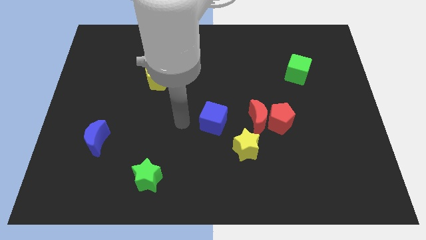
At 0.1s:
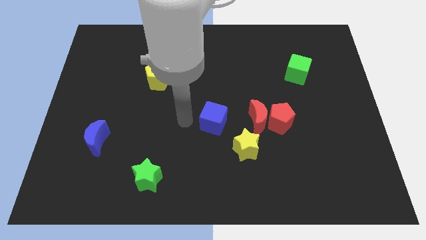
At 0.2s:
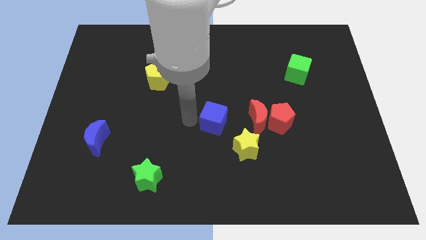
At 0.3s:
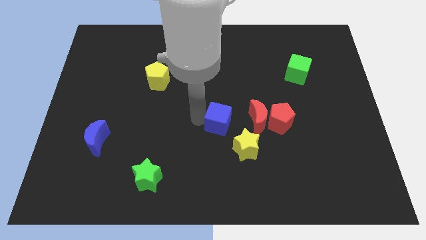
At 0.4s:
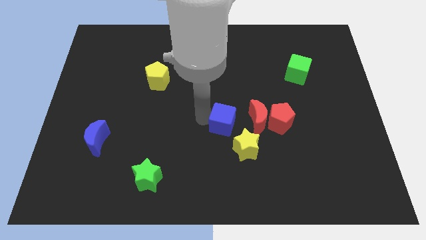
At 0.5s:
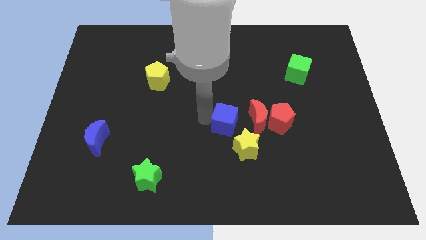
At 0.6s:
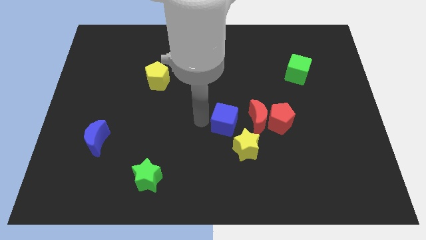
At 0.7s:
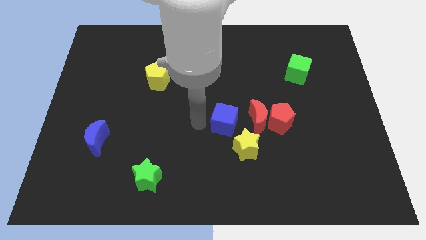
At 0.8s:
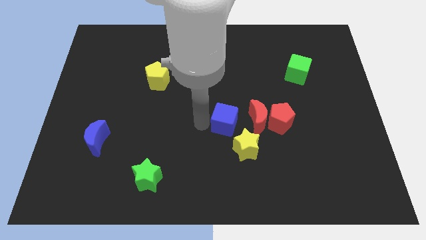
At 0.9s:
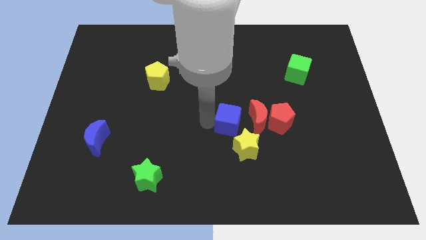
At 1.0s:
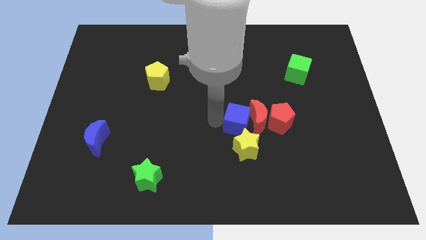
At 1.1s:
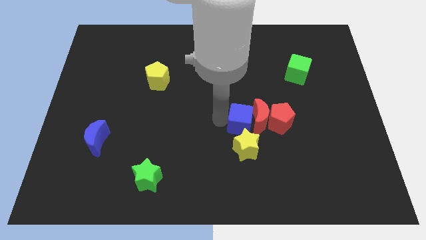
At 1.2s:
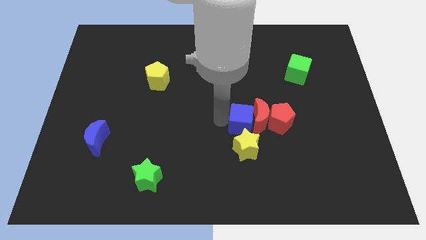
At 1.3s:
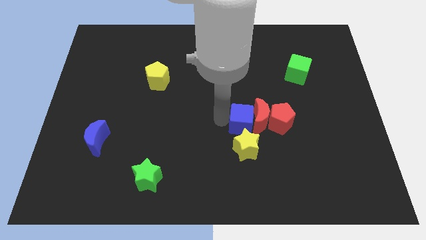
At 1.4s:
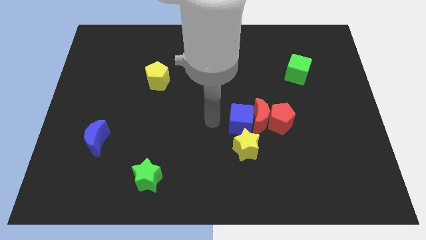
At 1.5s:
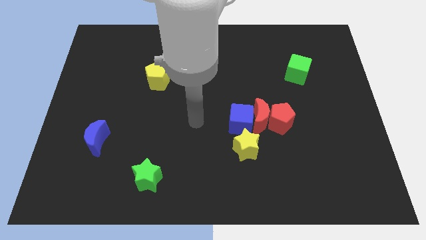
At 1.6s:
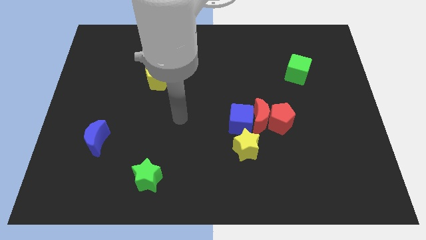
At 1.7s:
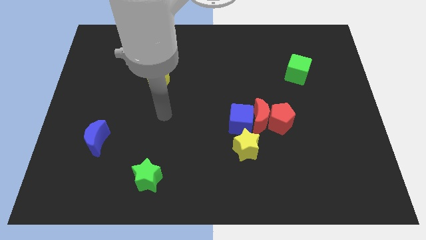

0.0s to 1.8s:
push the blue cube into the red crescent

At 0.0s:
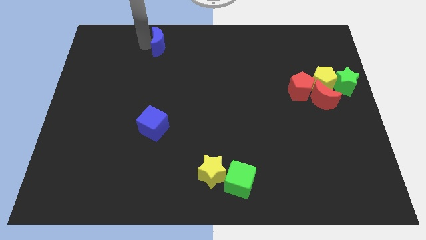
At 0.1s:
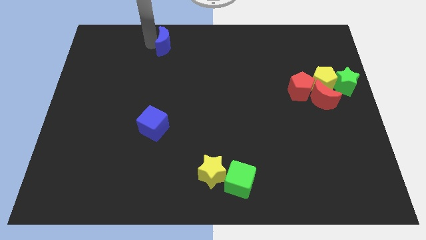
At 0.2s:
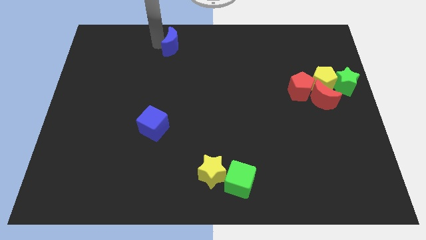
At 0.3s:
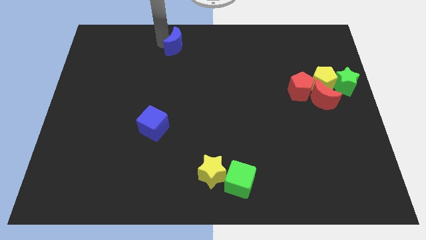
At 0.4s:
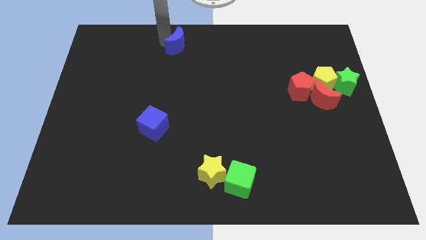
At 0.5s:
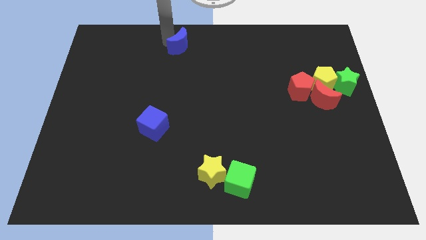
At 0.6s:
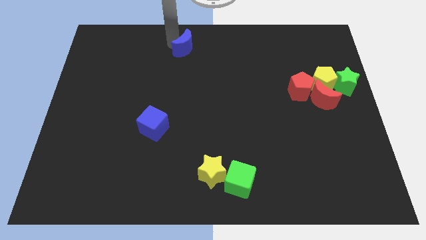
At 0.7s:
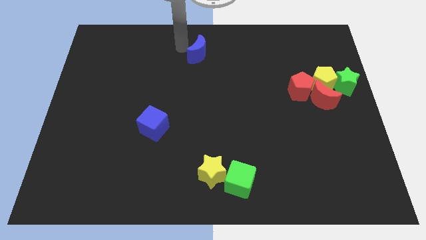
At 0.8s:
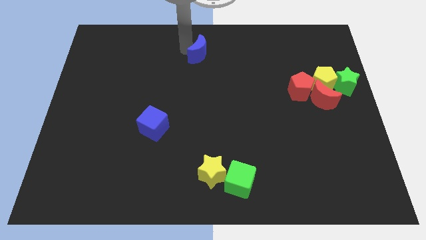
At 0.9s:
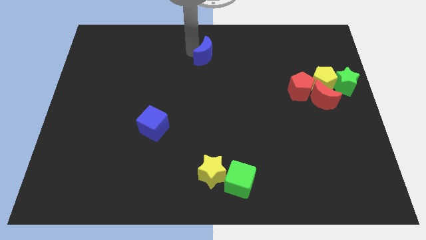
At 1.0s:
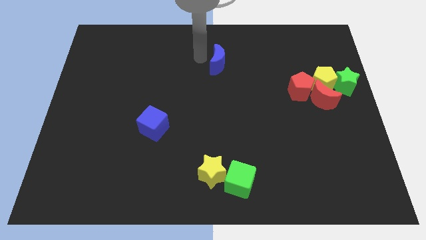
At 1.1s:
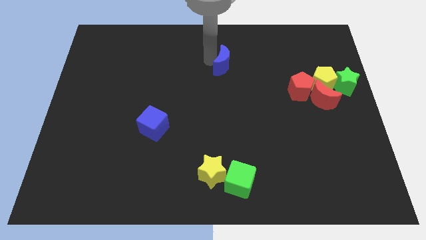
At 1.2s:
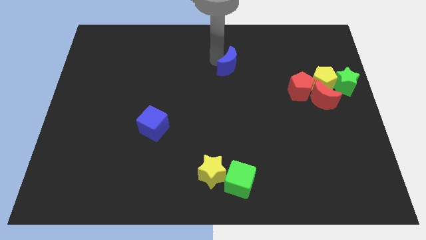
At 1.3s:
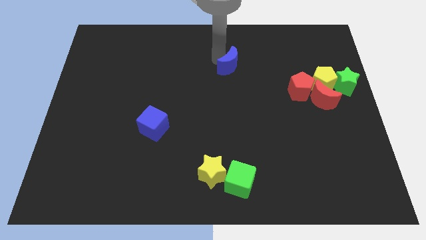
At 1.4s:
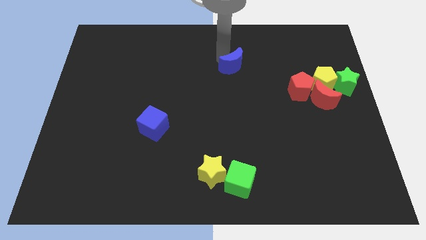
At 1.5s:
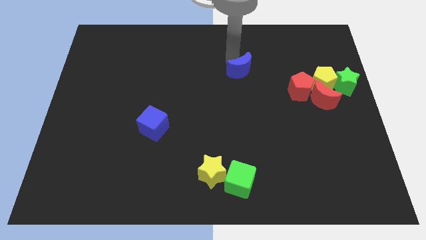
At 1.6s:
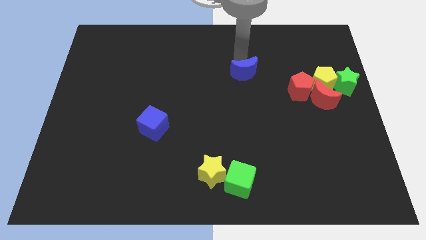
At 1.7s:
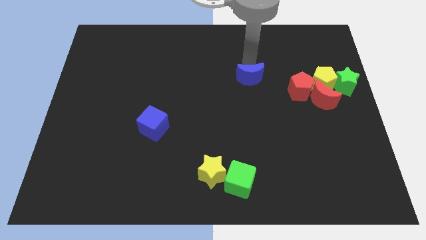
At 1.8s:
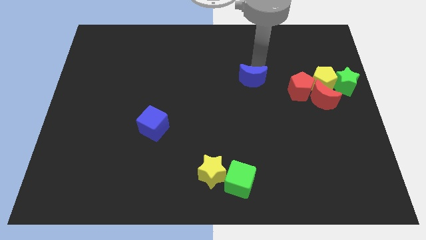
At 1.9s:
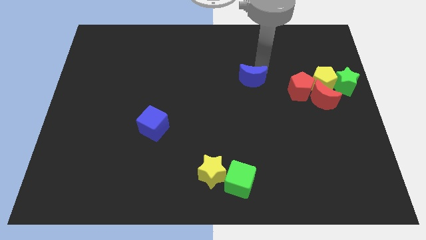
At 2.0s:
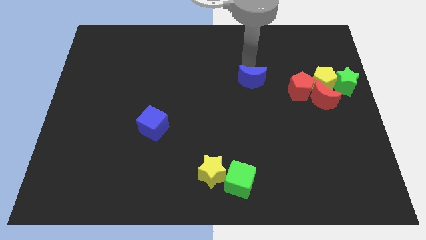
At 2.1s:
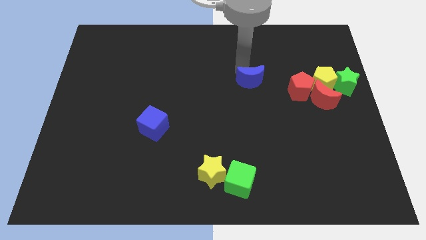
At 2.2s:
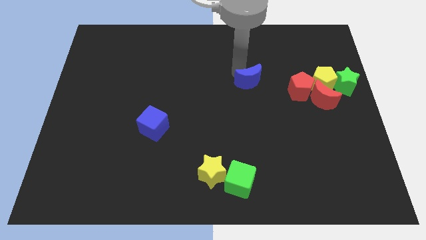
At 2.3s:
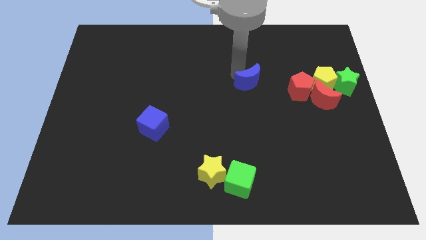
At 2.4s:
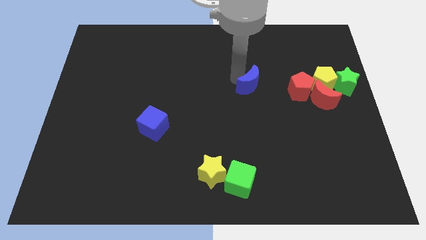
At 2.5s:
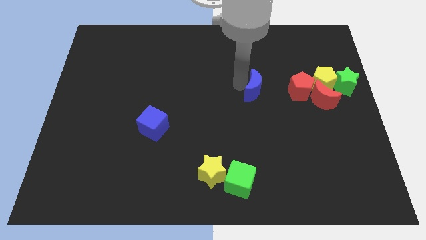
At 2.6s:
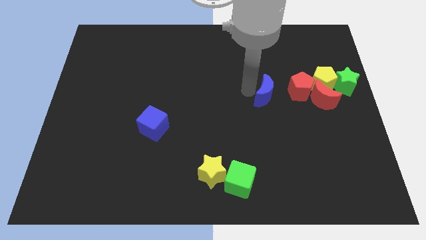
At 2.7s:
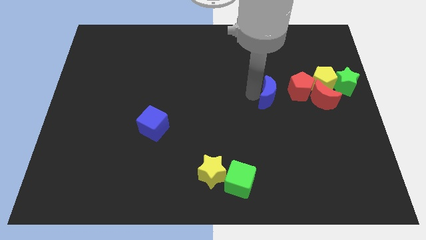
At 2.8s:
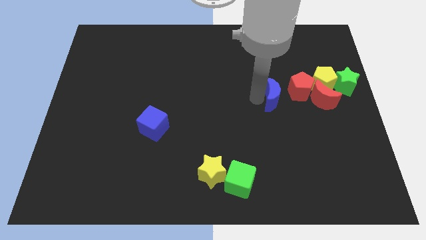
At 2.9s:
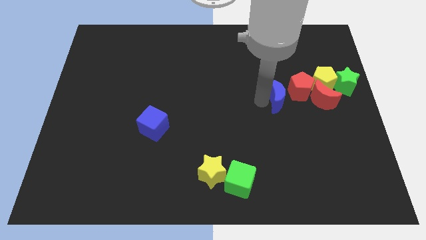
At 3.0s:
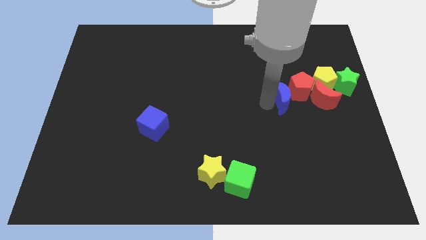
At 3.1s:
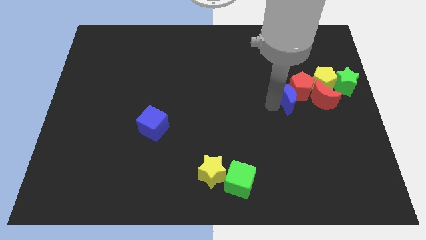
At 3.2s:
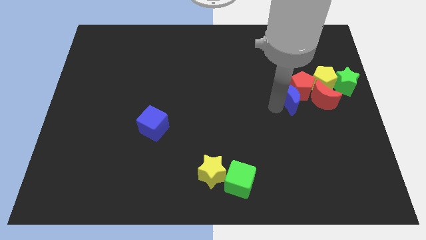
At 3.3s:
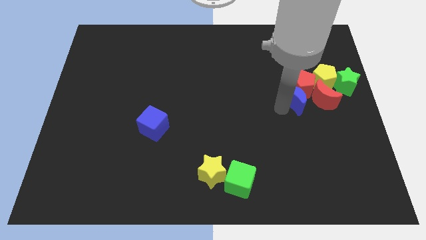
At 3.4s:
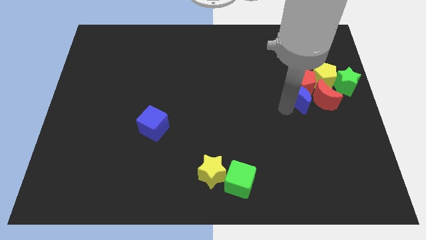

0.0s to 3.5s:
move the blue crescent into the group of blocks

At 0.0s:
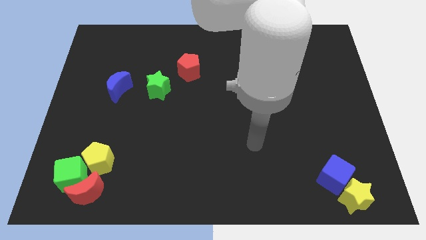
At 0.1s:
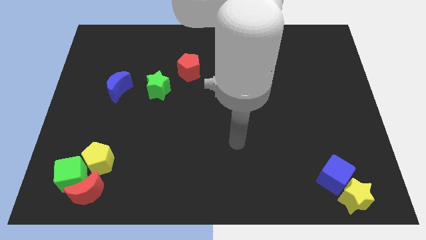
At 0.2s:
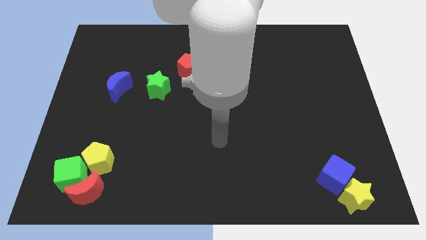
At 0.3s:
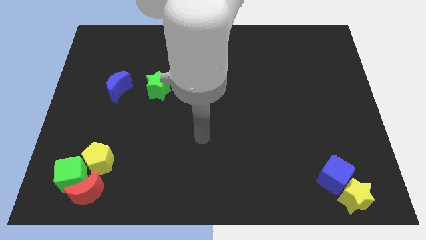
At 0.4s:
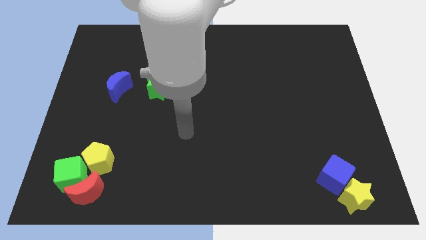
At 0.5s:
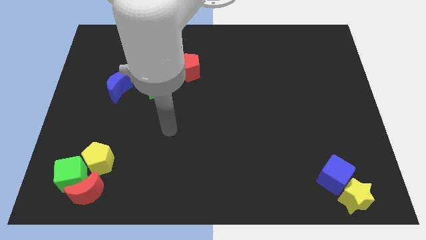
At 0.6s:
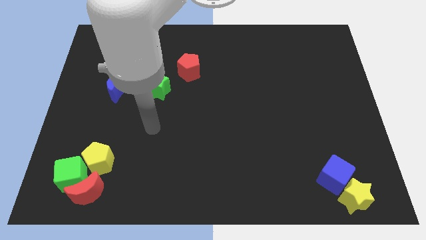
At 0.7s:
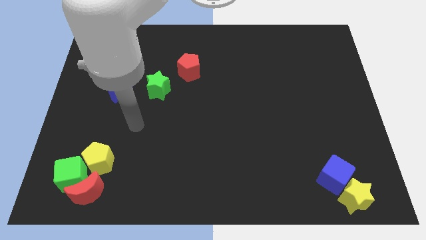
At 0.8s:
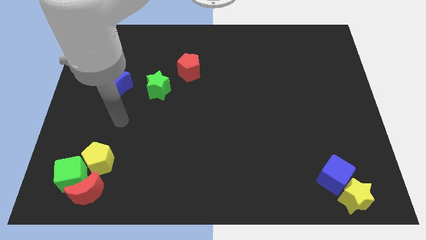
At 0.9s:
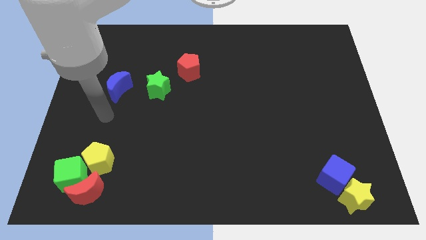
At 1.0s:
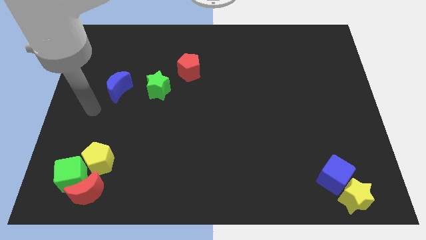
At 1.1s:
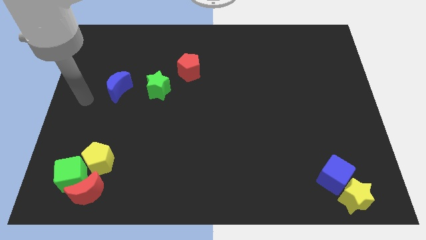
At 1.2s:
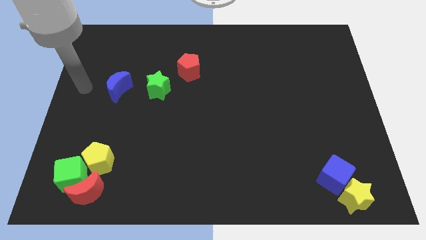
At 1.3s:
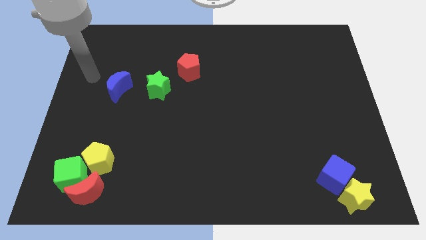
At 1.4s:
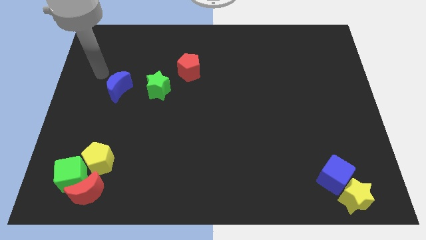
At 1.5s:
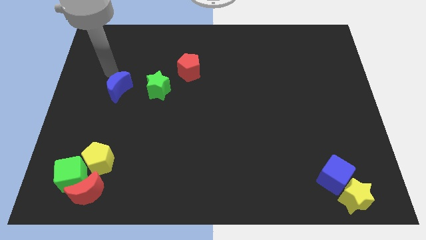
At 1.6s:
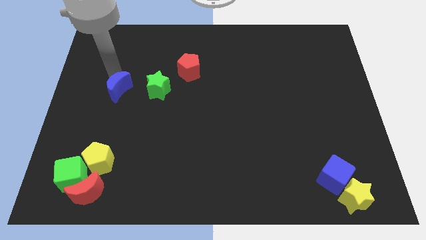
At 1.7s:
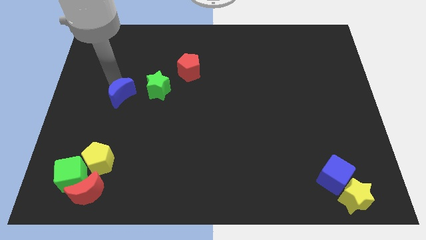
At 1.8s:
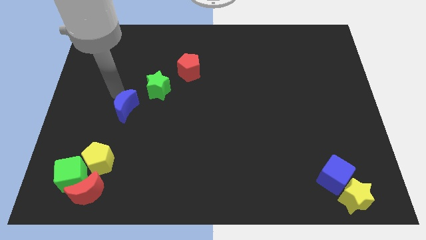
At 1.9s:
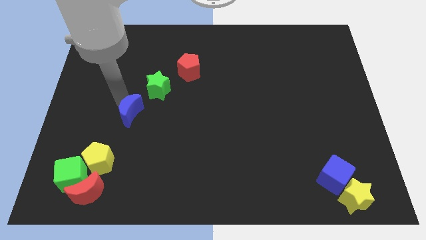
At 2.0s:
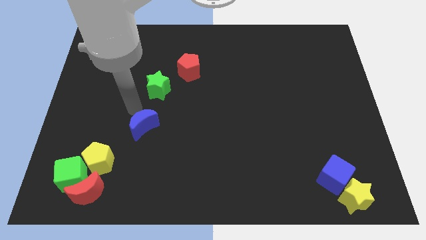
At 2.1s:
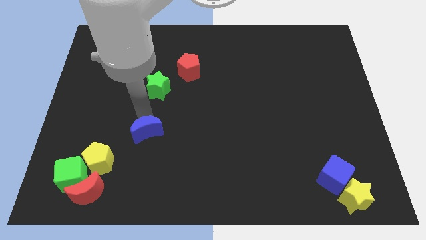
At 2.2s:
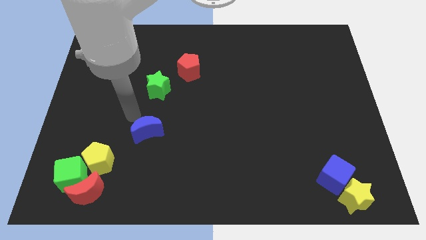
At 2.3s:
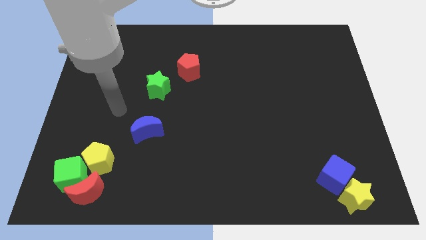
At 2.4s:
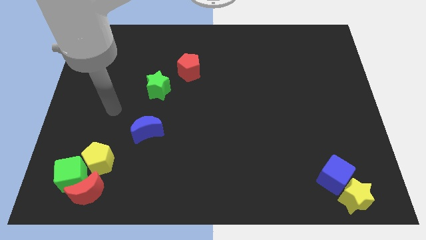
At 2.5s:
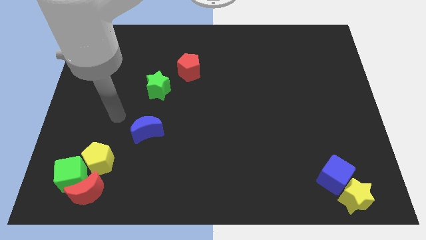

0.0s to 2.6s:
put blue cube vertically below green star

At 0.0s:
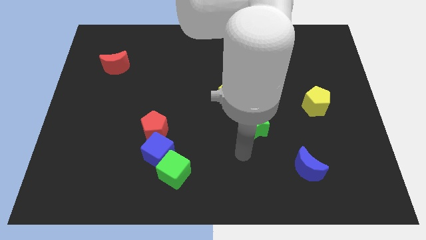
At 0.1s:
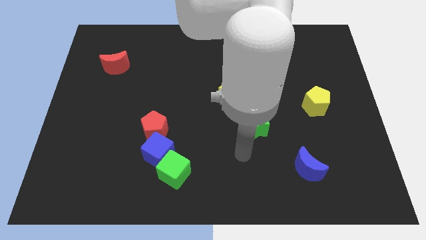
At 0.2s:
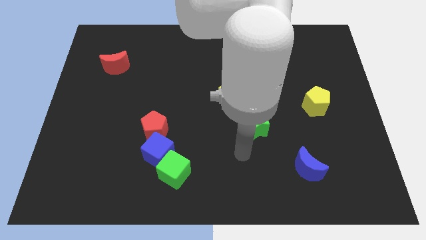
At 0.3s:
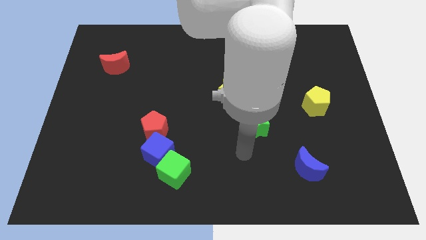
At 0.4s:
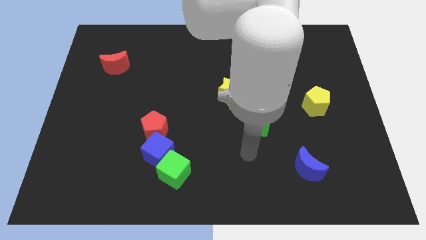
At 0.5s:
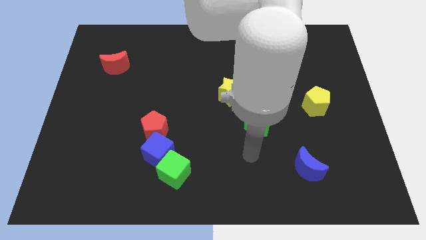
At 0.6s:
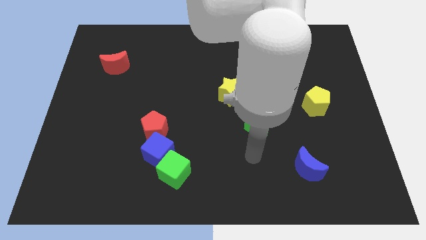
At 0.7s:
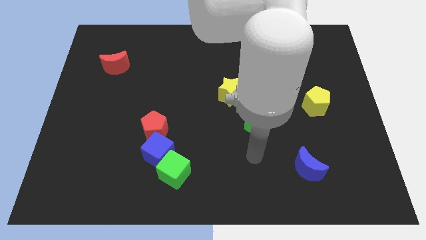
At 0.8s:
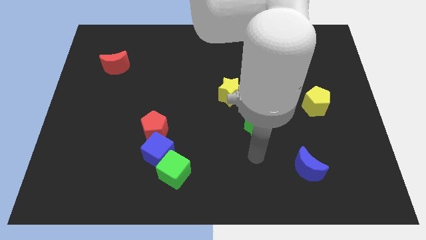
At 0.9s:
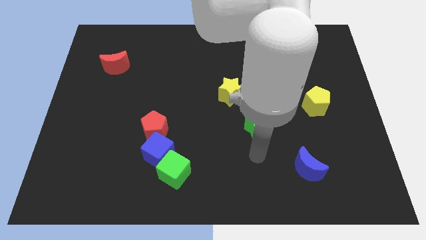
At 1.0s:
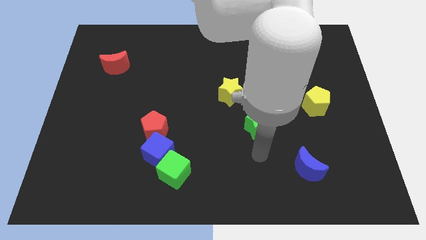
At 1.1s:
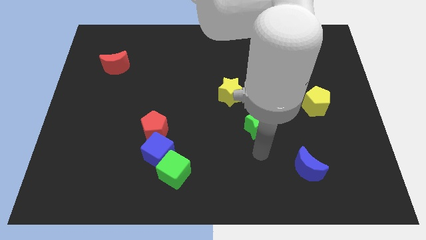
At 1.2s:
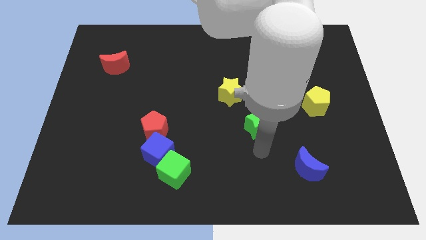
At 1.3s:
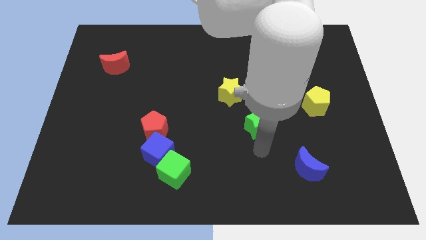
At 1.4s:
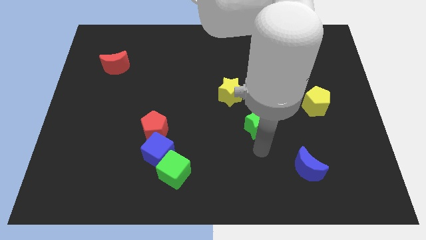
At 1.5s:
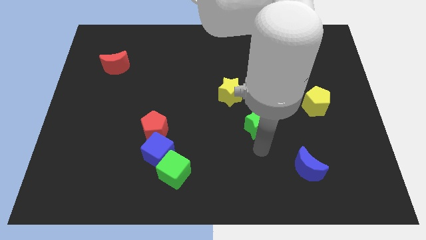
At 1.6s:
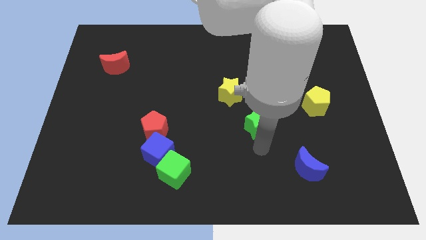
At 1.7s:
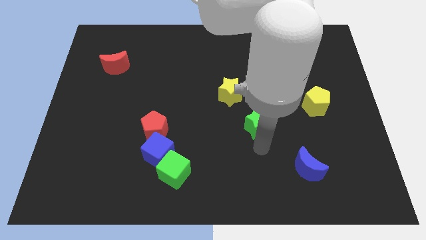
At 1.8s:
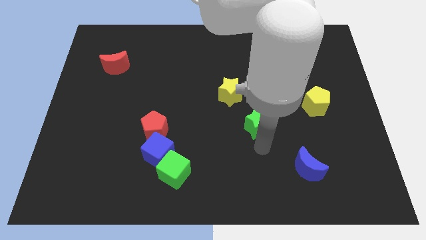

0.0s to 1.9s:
point your arm below green star
